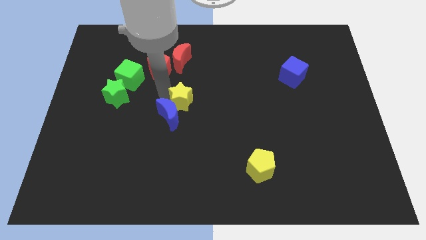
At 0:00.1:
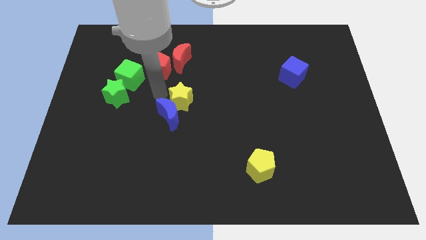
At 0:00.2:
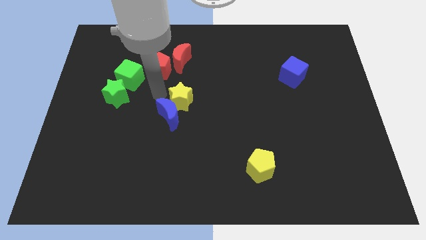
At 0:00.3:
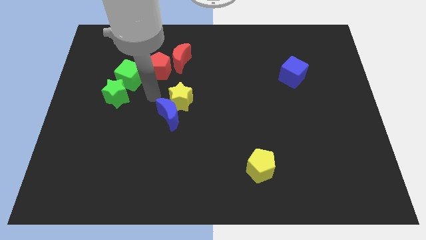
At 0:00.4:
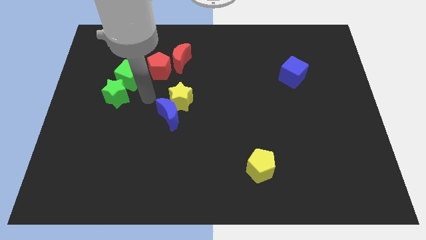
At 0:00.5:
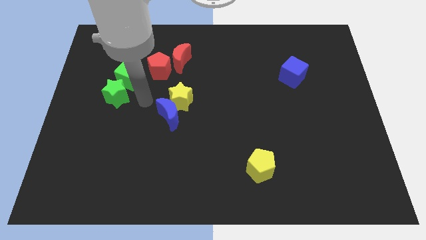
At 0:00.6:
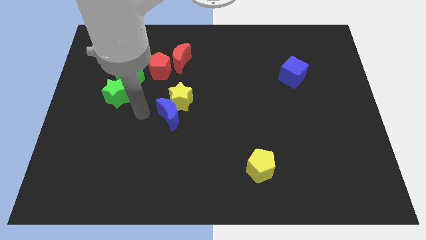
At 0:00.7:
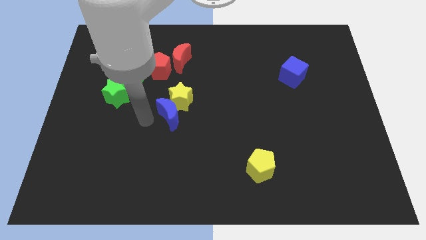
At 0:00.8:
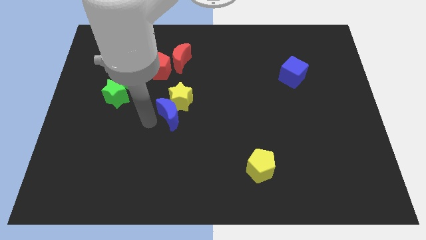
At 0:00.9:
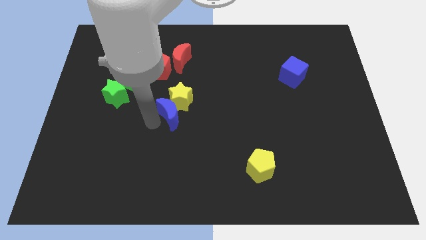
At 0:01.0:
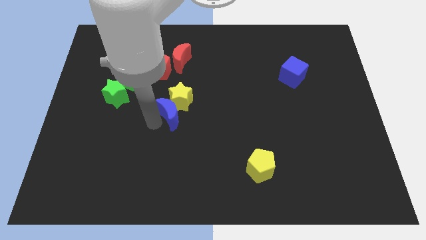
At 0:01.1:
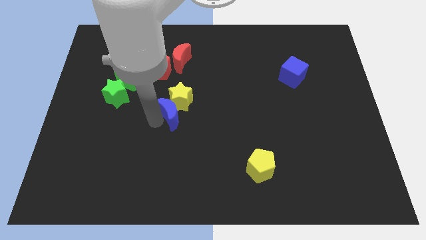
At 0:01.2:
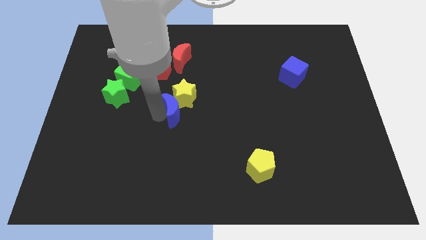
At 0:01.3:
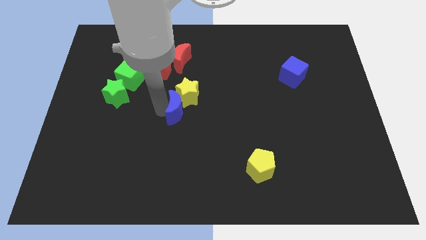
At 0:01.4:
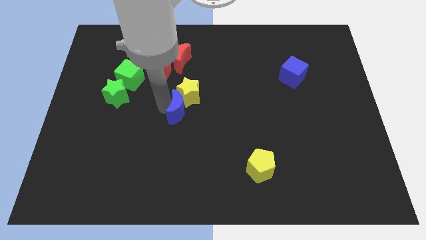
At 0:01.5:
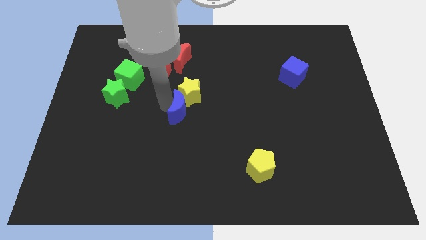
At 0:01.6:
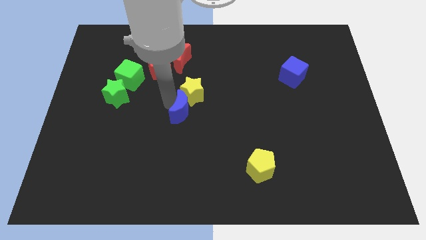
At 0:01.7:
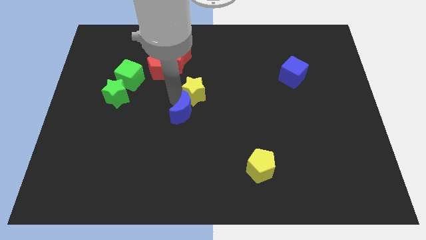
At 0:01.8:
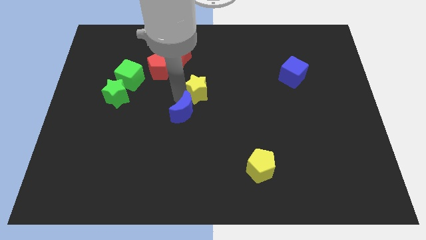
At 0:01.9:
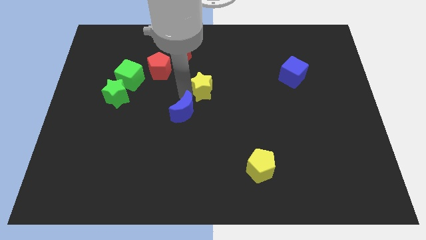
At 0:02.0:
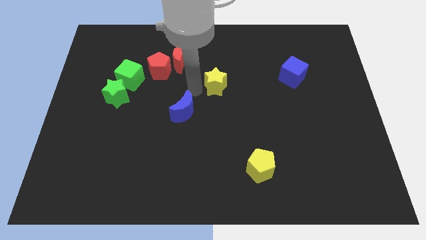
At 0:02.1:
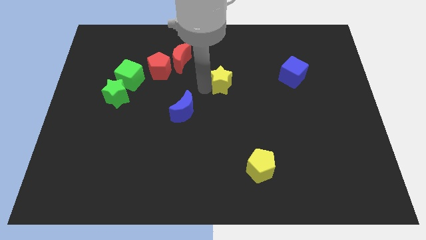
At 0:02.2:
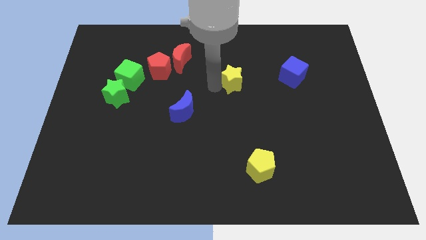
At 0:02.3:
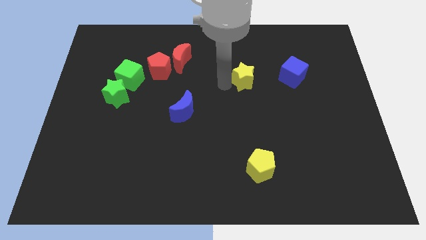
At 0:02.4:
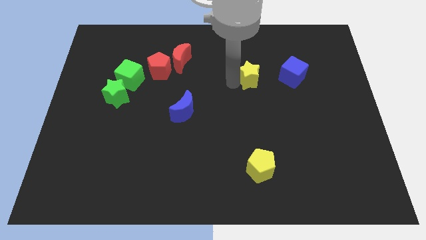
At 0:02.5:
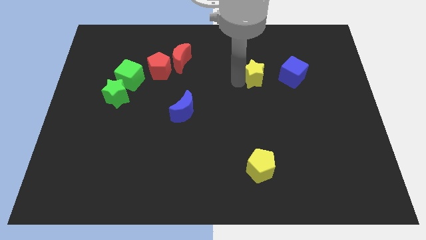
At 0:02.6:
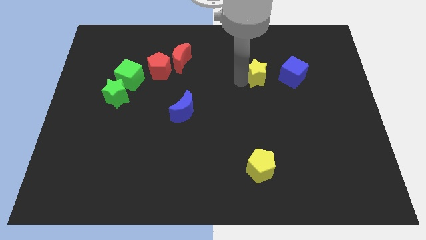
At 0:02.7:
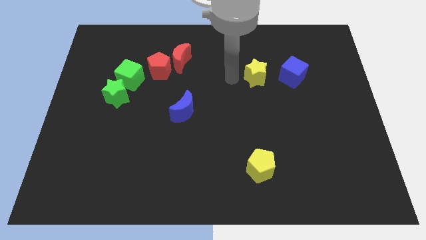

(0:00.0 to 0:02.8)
move the yellow star to the left of the blue cube

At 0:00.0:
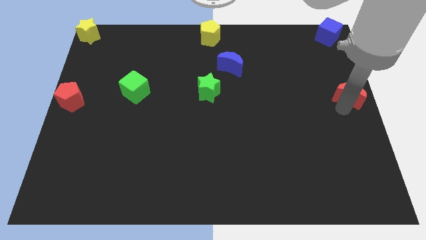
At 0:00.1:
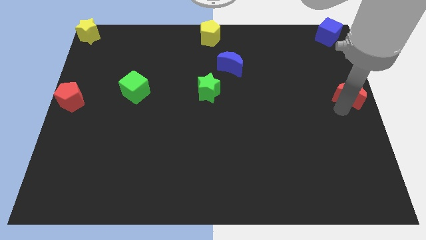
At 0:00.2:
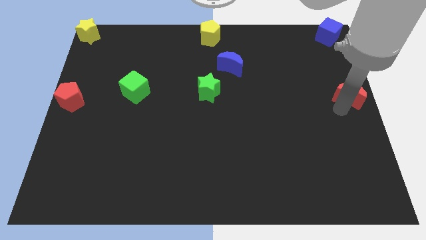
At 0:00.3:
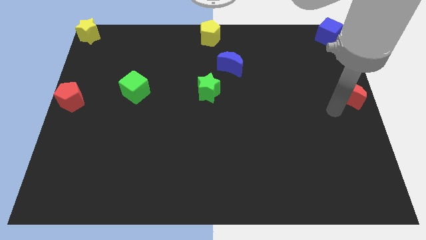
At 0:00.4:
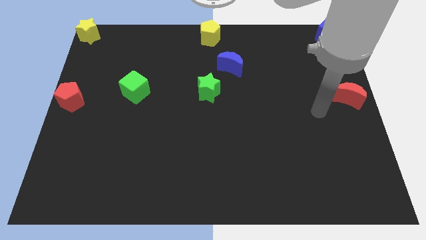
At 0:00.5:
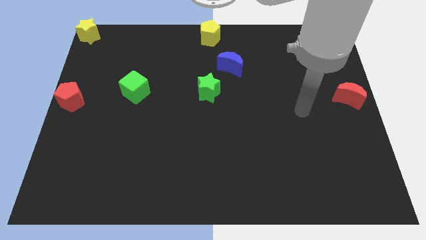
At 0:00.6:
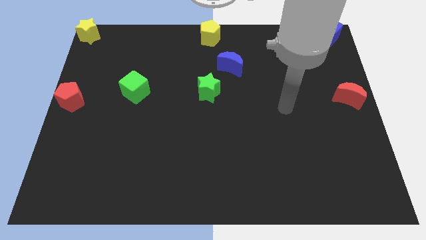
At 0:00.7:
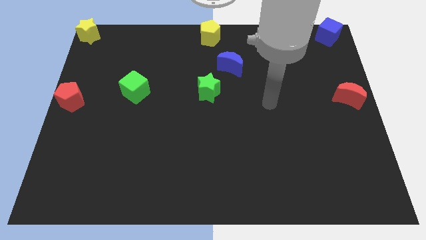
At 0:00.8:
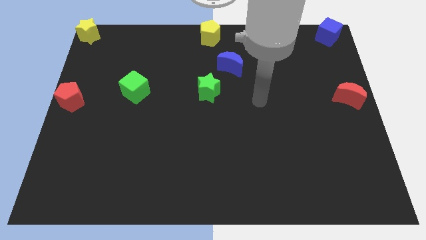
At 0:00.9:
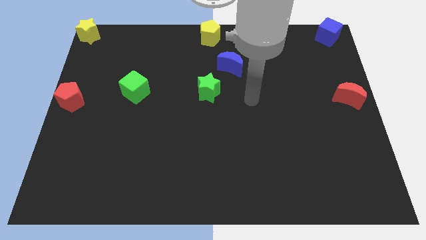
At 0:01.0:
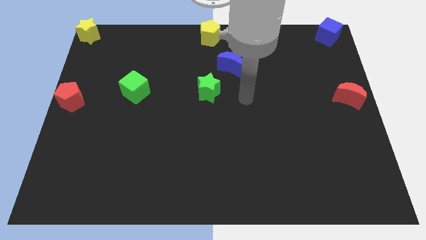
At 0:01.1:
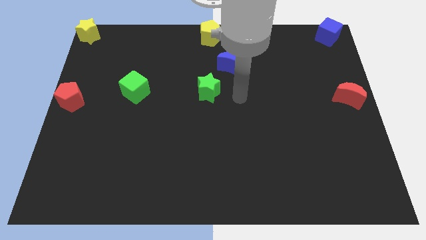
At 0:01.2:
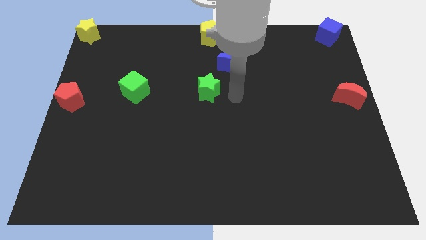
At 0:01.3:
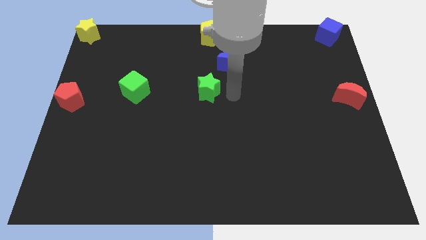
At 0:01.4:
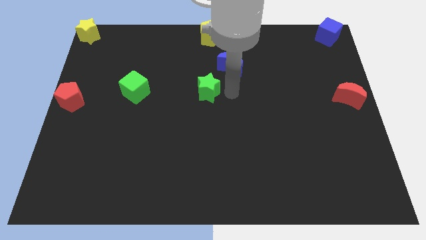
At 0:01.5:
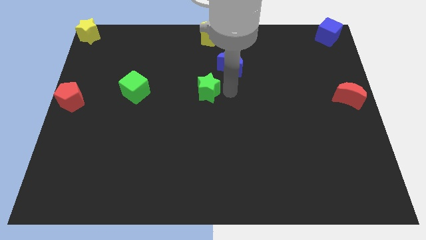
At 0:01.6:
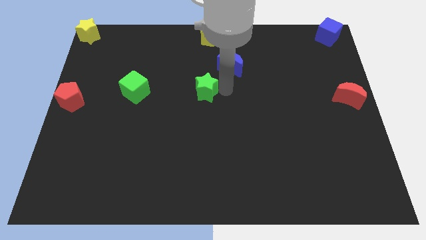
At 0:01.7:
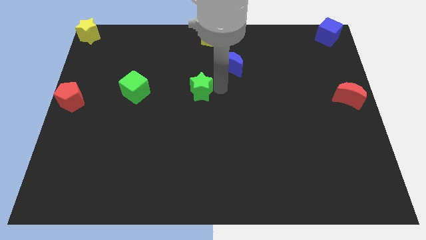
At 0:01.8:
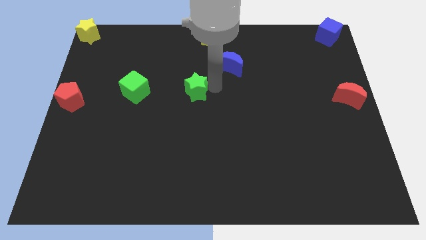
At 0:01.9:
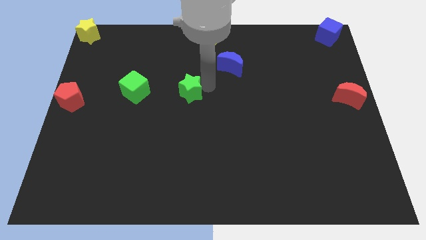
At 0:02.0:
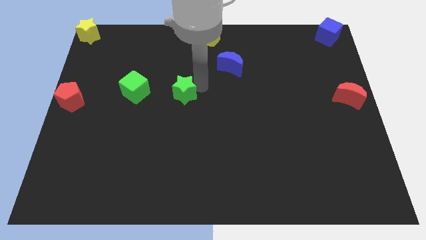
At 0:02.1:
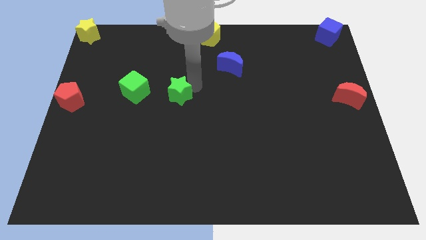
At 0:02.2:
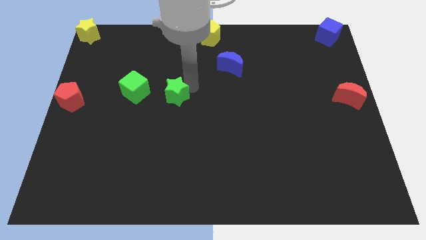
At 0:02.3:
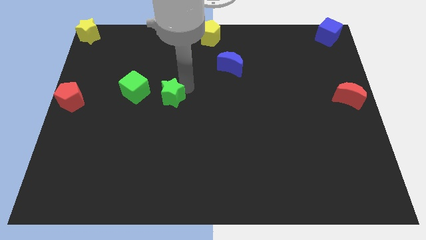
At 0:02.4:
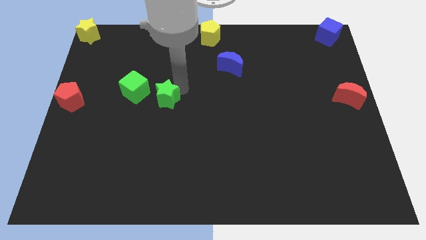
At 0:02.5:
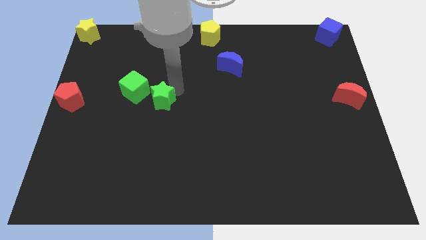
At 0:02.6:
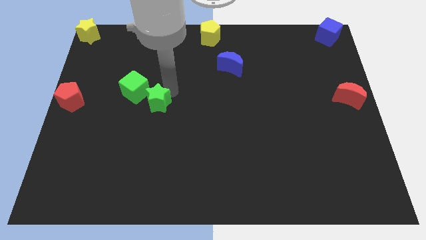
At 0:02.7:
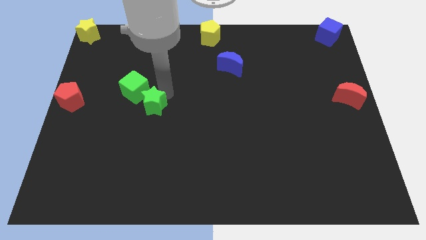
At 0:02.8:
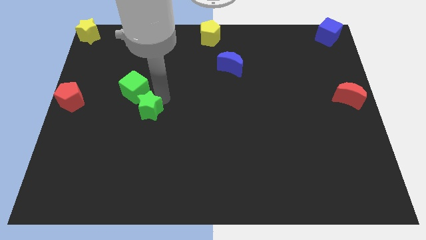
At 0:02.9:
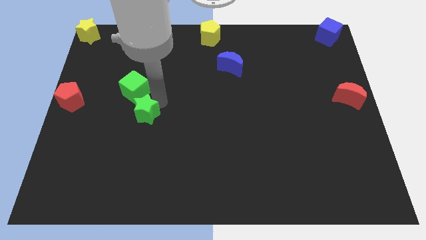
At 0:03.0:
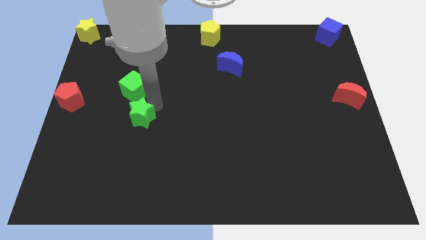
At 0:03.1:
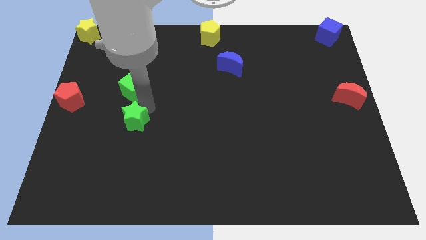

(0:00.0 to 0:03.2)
push the green star to the bottom right side of the green cube

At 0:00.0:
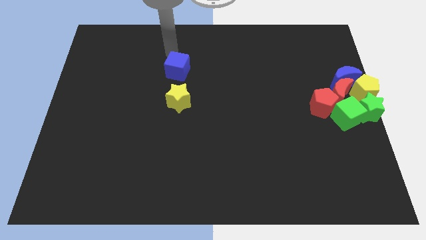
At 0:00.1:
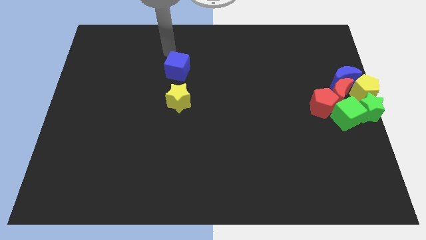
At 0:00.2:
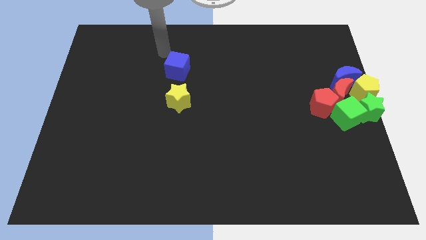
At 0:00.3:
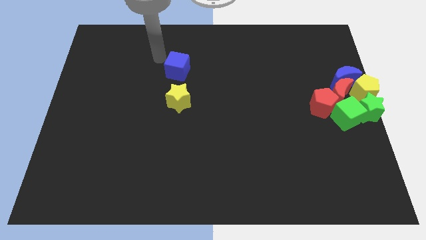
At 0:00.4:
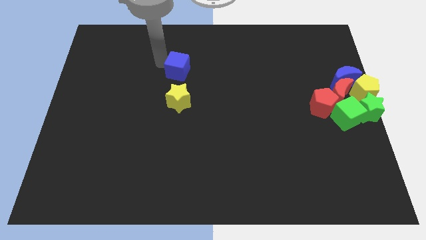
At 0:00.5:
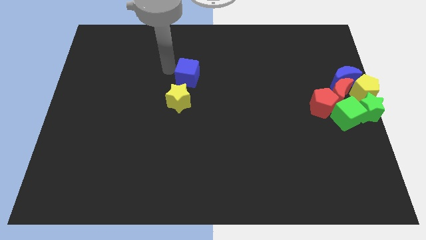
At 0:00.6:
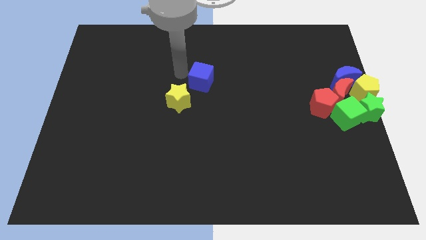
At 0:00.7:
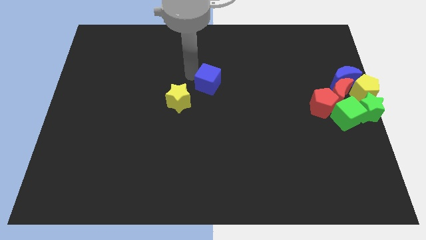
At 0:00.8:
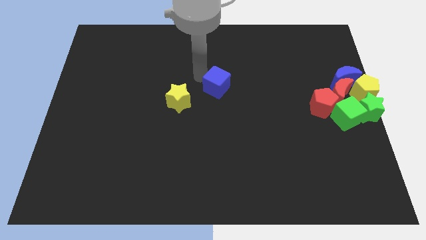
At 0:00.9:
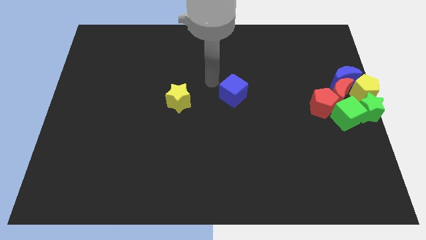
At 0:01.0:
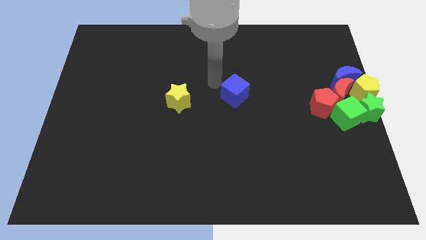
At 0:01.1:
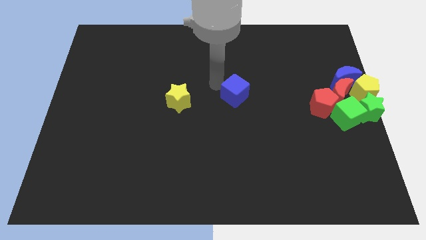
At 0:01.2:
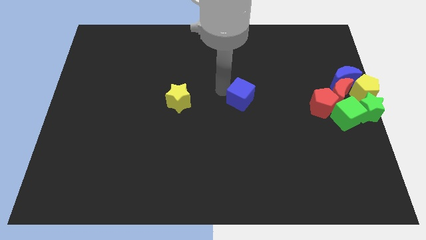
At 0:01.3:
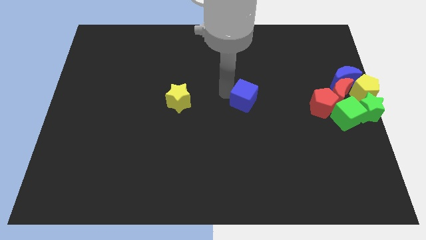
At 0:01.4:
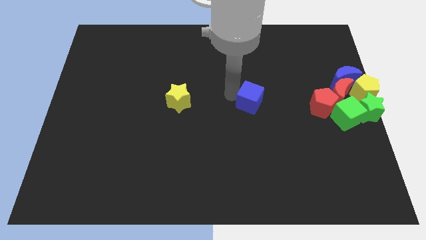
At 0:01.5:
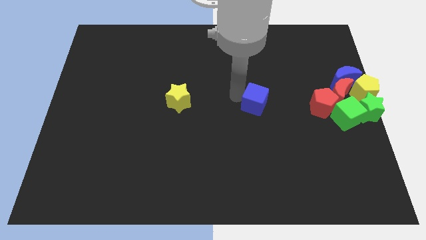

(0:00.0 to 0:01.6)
place the blue cube to the right of the yellow star

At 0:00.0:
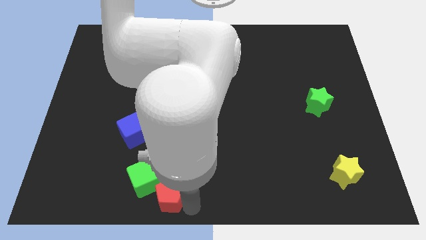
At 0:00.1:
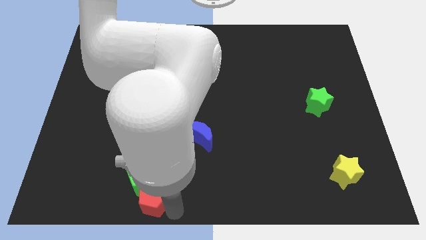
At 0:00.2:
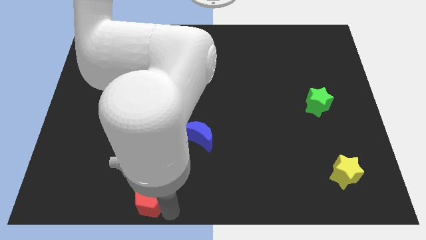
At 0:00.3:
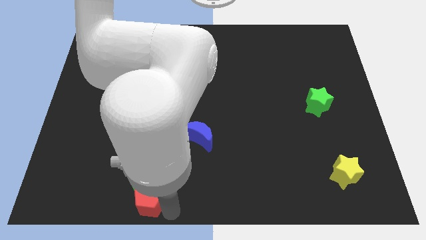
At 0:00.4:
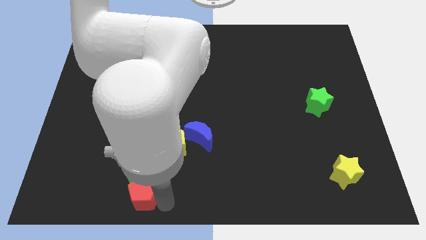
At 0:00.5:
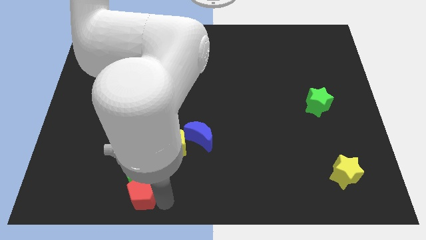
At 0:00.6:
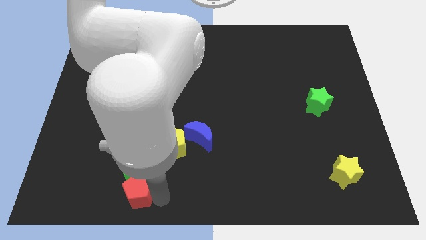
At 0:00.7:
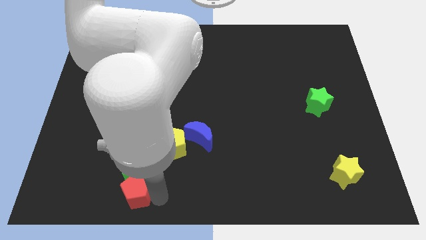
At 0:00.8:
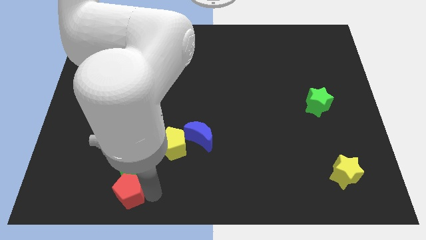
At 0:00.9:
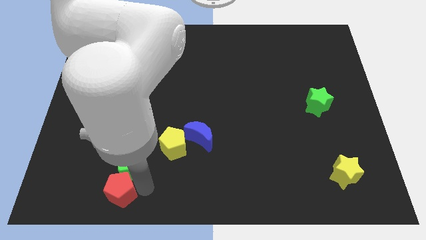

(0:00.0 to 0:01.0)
move the red pentagon towards the green cube

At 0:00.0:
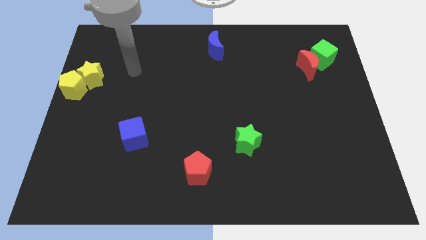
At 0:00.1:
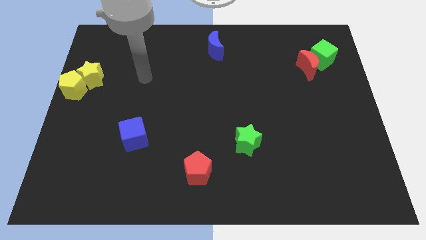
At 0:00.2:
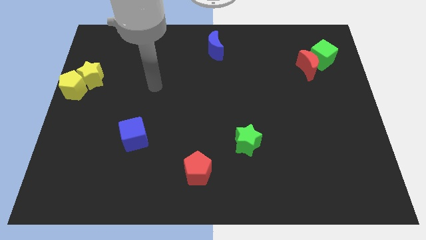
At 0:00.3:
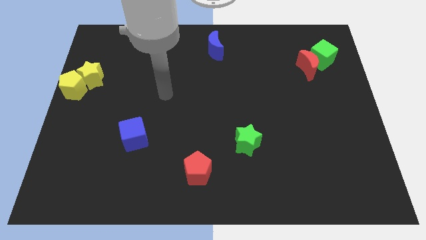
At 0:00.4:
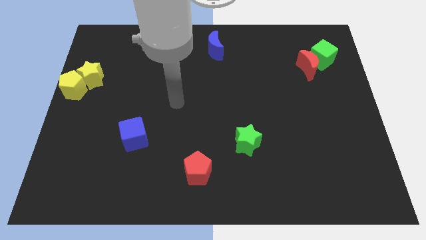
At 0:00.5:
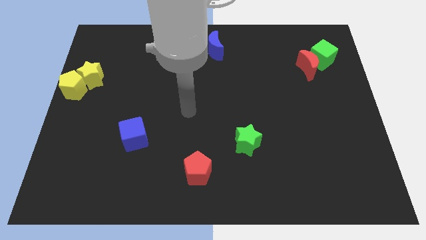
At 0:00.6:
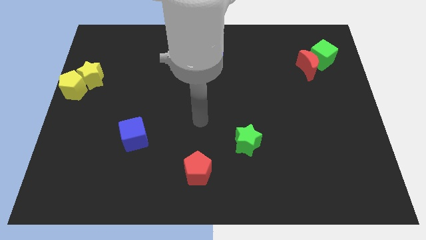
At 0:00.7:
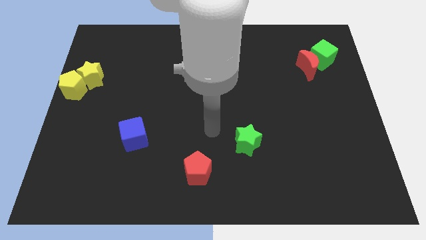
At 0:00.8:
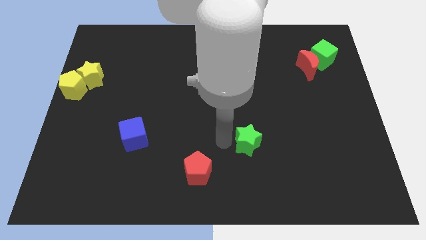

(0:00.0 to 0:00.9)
move the arm towards the left side of the green star
